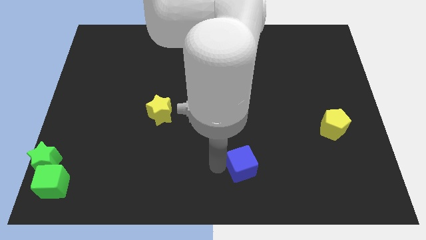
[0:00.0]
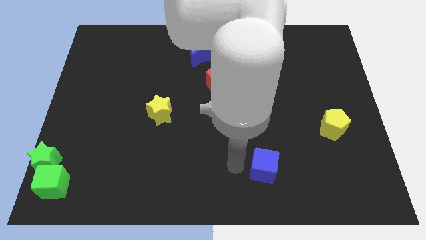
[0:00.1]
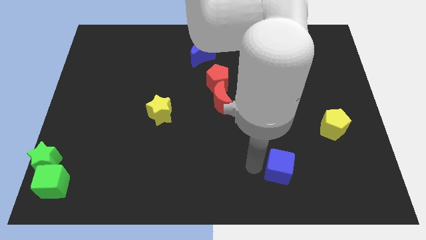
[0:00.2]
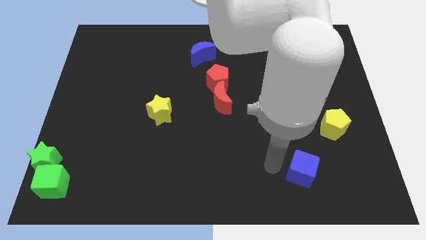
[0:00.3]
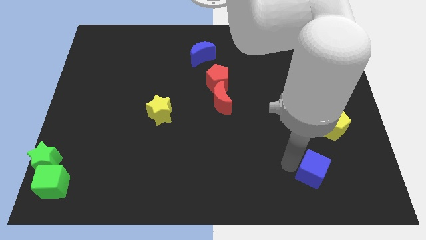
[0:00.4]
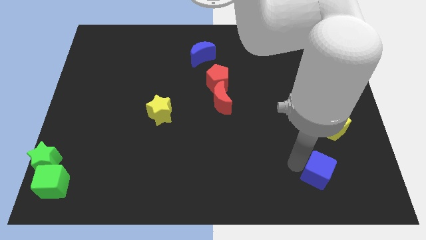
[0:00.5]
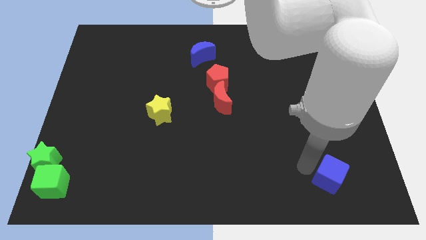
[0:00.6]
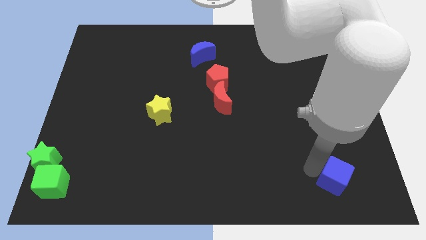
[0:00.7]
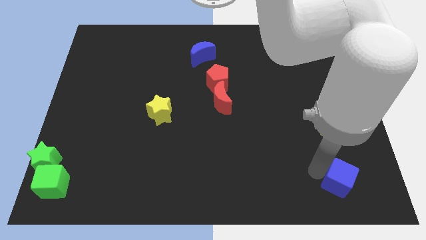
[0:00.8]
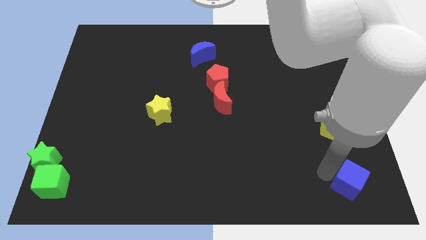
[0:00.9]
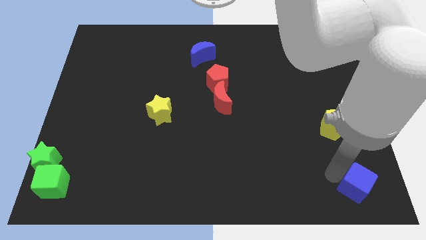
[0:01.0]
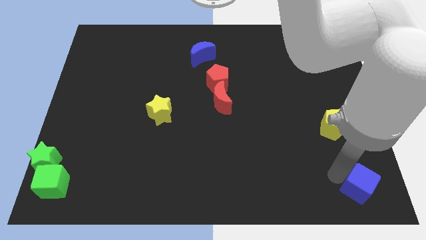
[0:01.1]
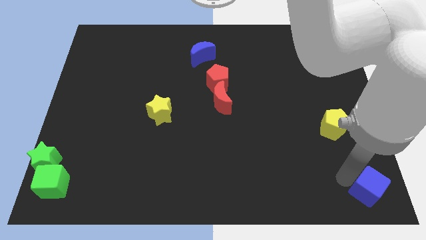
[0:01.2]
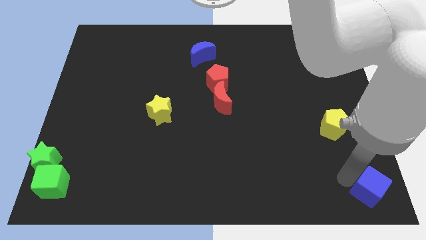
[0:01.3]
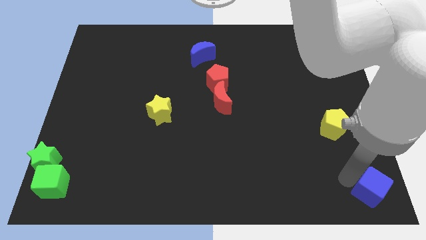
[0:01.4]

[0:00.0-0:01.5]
move the blue cube to the bottom right of the board

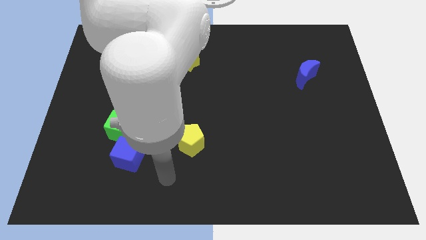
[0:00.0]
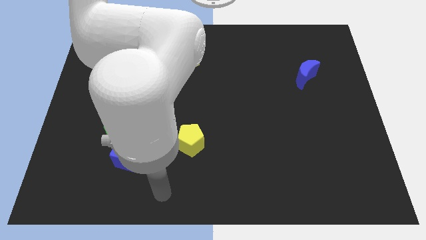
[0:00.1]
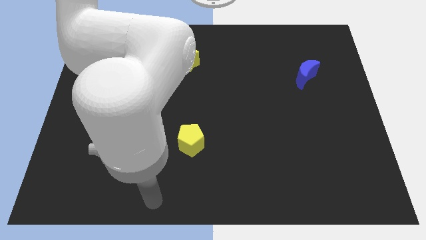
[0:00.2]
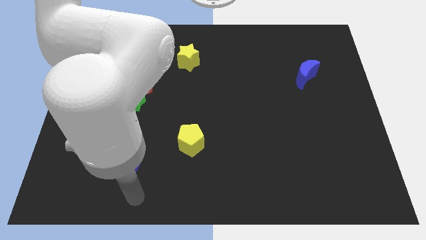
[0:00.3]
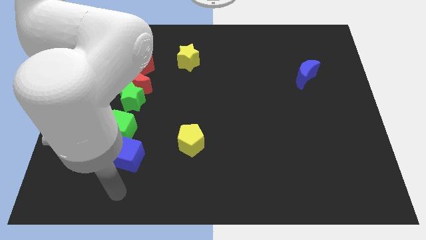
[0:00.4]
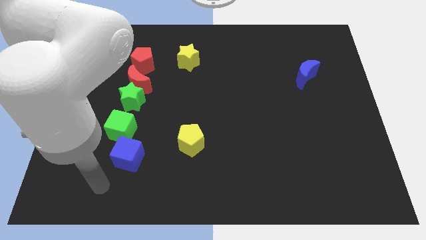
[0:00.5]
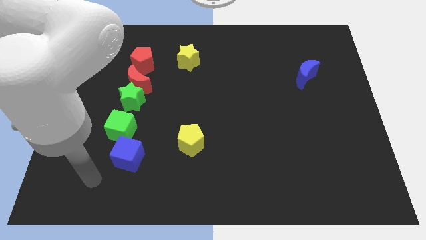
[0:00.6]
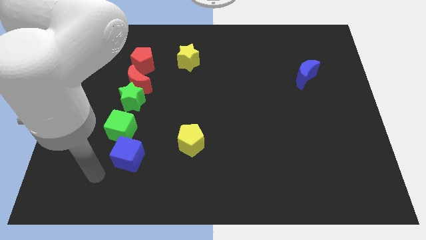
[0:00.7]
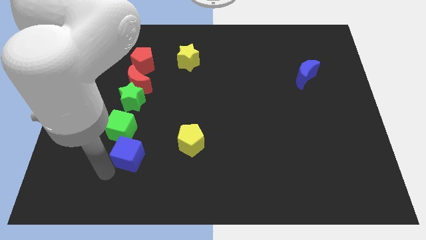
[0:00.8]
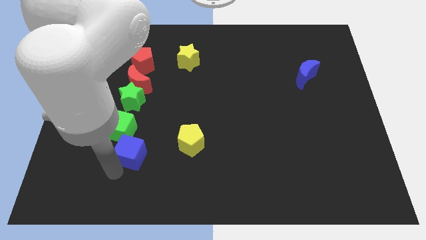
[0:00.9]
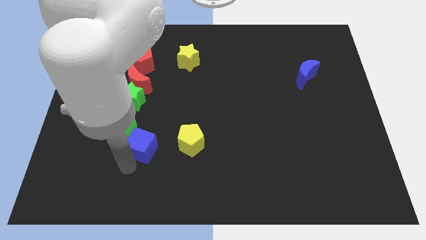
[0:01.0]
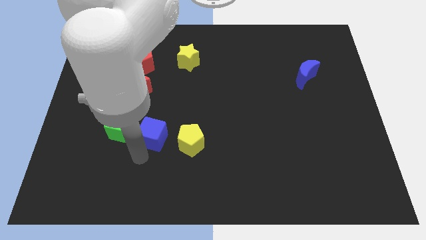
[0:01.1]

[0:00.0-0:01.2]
place blue cube between yellow pentagon and green cube

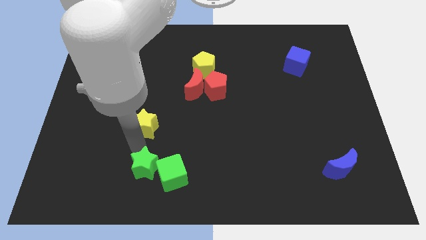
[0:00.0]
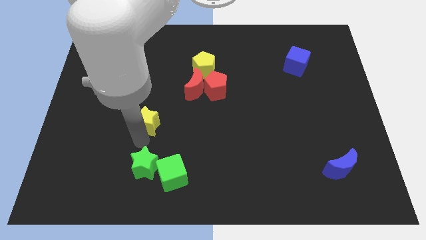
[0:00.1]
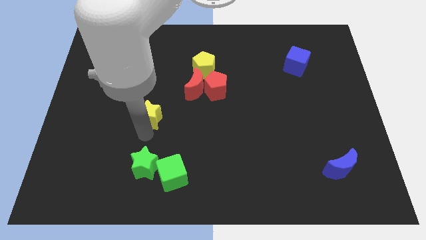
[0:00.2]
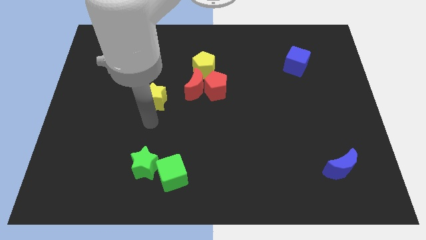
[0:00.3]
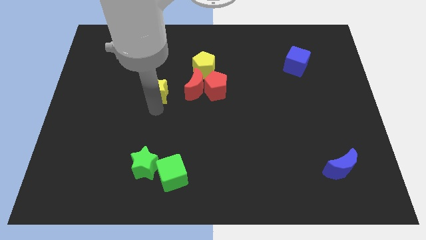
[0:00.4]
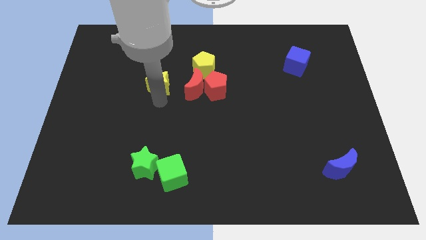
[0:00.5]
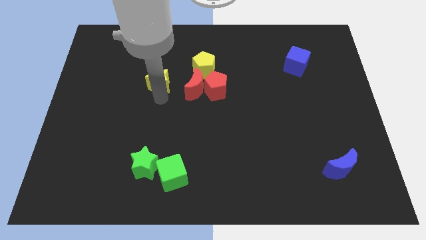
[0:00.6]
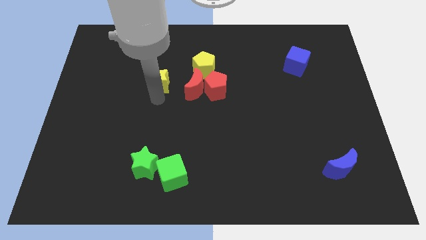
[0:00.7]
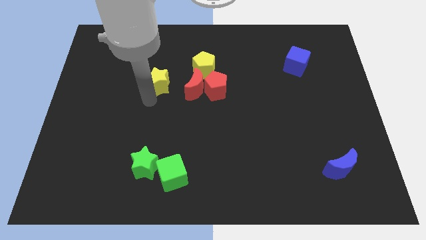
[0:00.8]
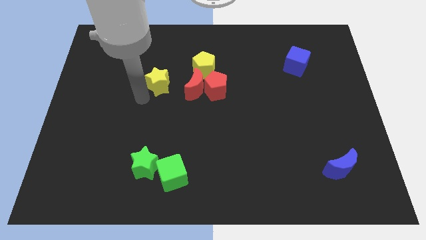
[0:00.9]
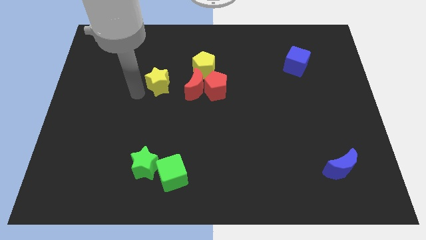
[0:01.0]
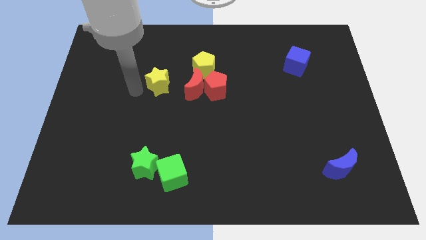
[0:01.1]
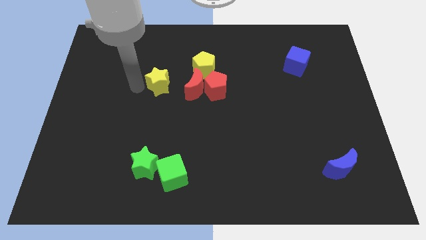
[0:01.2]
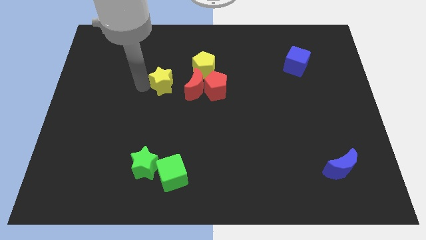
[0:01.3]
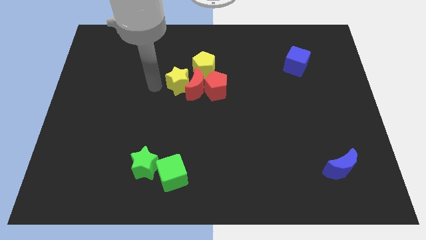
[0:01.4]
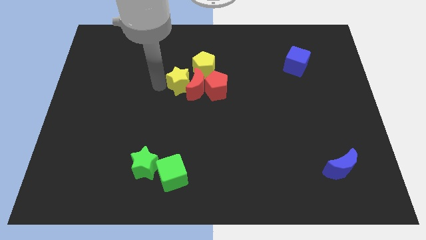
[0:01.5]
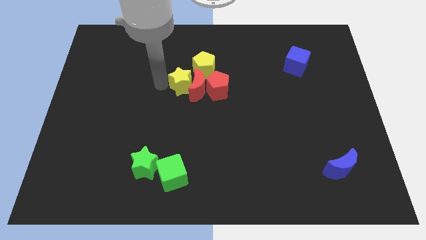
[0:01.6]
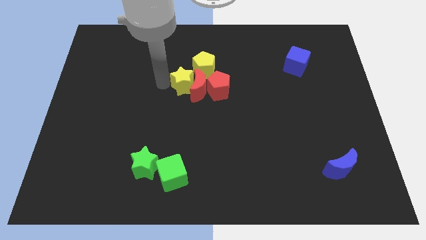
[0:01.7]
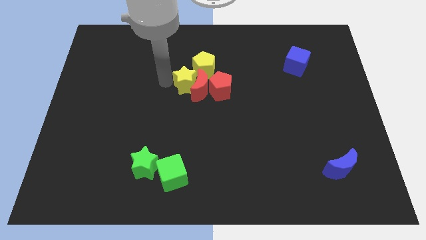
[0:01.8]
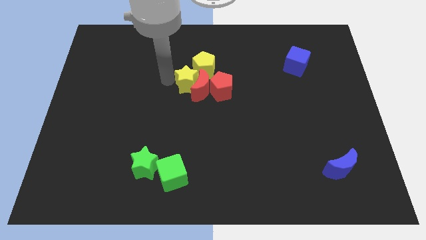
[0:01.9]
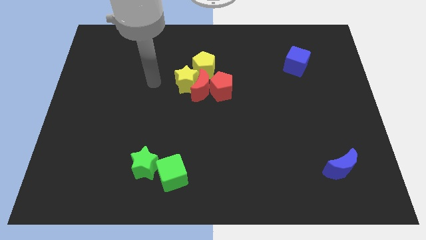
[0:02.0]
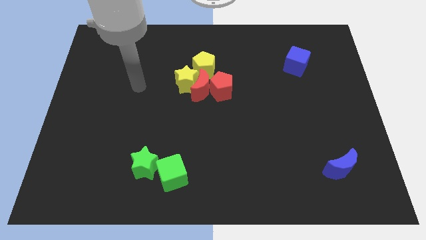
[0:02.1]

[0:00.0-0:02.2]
place a yellow star on the left side of the red crescent

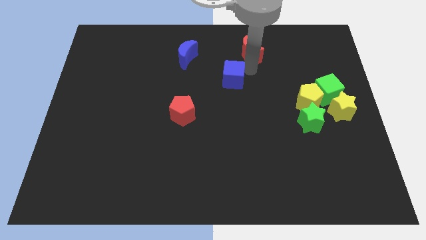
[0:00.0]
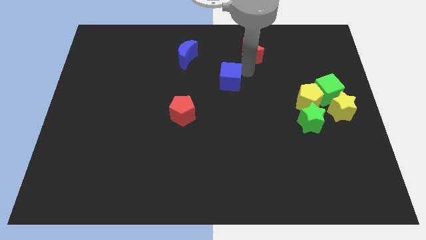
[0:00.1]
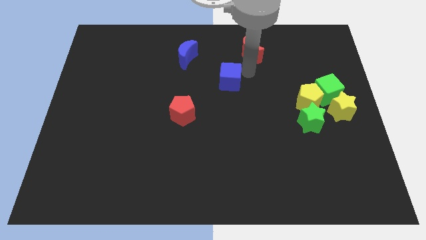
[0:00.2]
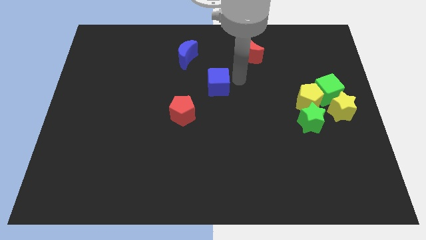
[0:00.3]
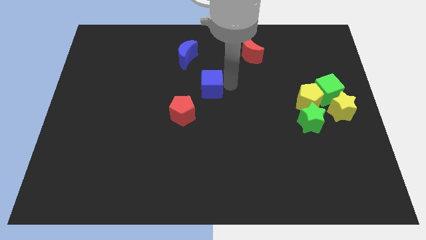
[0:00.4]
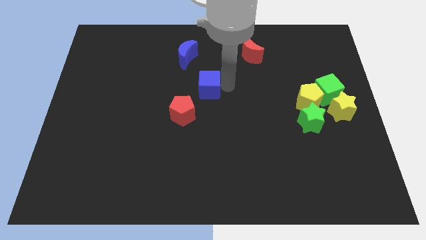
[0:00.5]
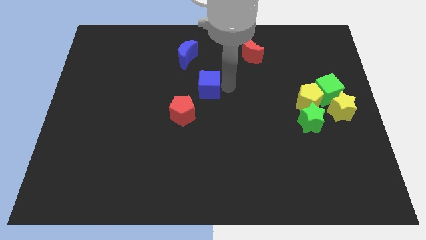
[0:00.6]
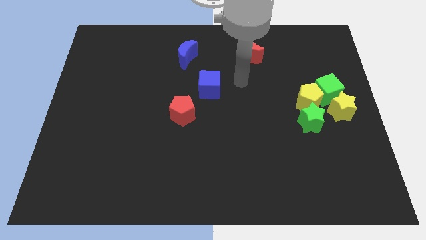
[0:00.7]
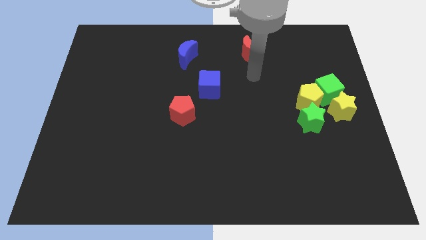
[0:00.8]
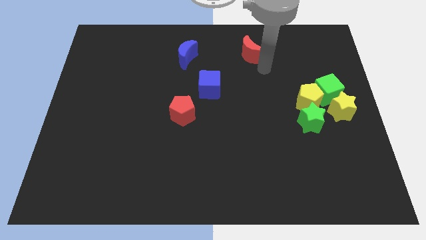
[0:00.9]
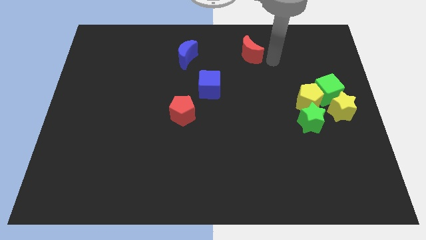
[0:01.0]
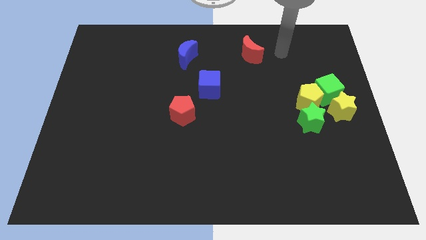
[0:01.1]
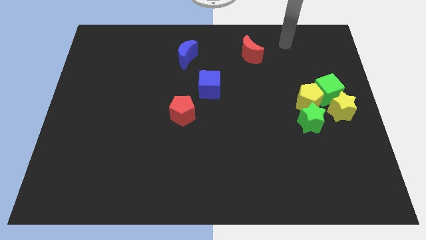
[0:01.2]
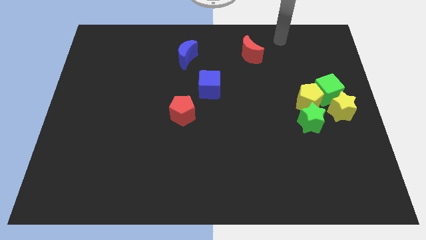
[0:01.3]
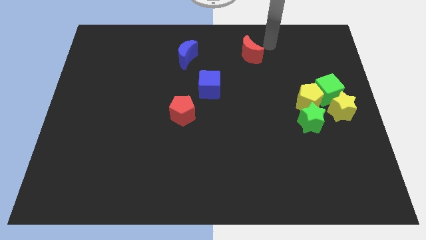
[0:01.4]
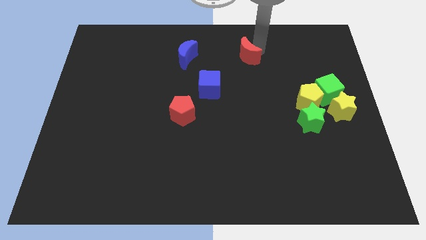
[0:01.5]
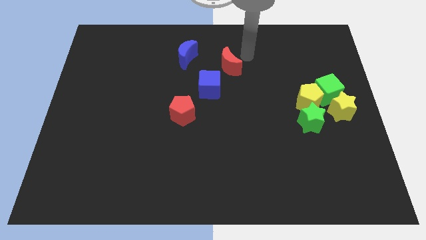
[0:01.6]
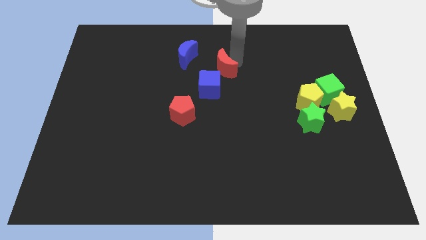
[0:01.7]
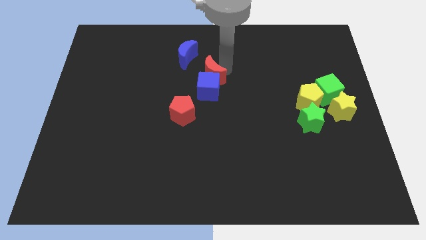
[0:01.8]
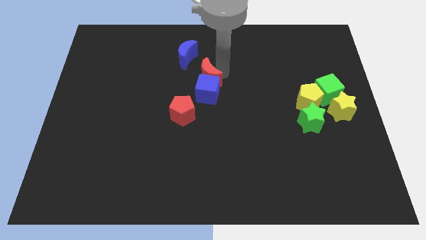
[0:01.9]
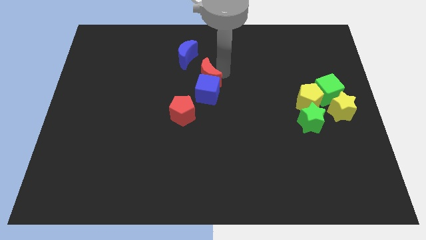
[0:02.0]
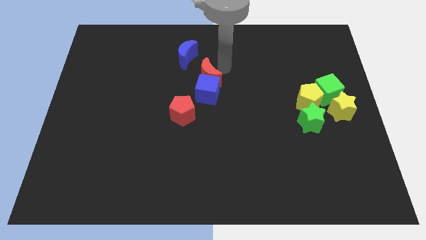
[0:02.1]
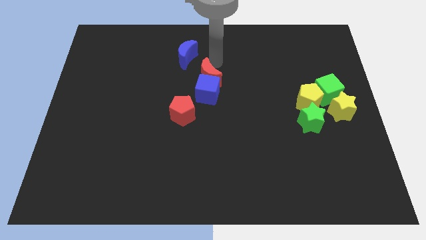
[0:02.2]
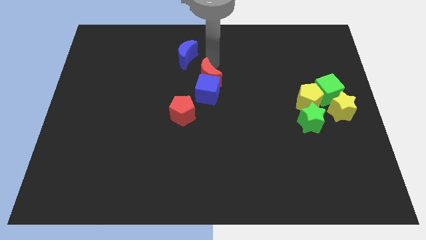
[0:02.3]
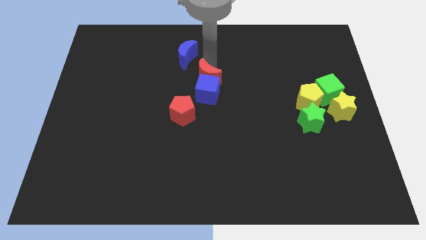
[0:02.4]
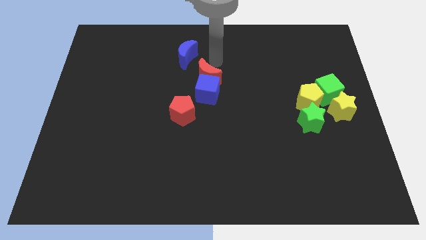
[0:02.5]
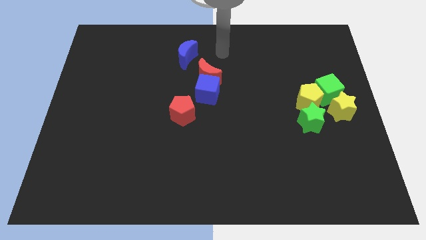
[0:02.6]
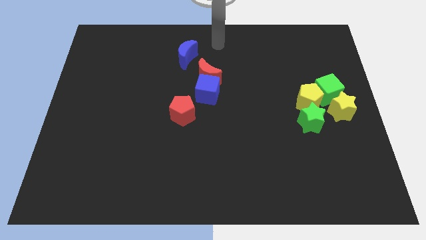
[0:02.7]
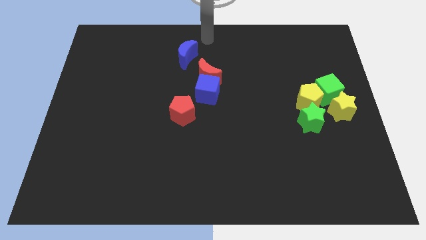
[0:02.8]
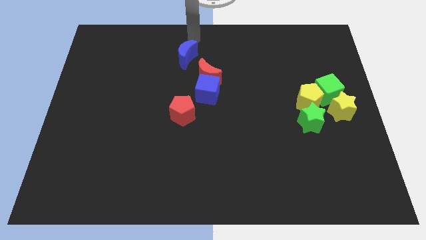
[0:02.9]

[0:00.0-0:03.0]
push the red moon and blue cube towards the red pentagon

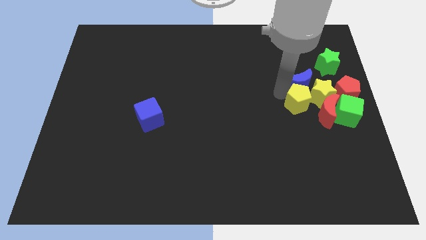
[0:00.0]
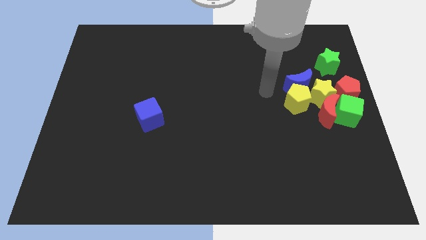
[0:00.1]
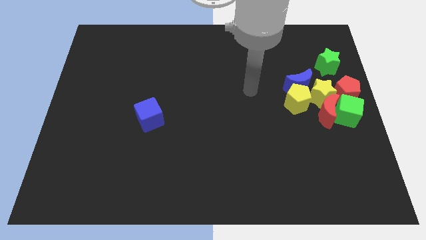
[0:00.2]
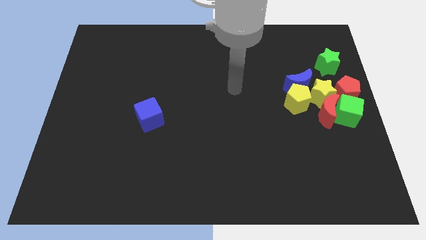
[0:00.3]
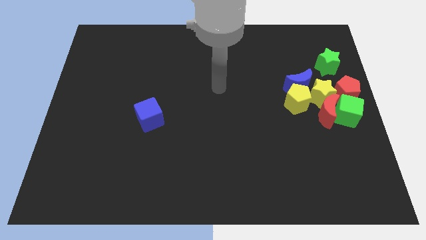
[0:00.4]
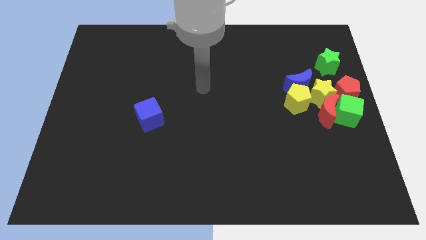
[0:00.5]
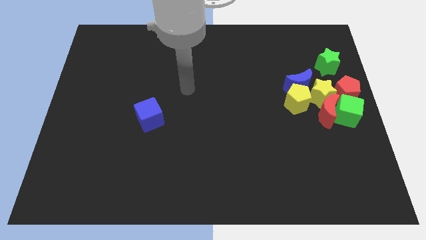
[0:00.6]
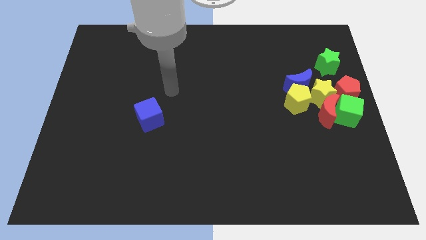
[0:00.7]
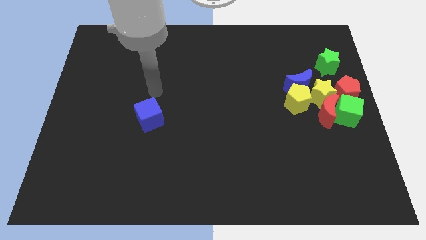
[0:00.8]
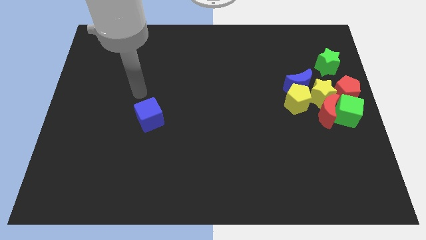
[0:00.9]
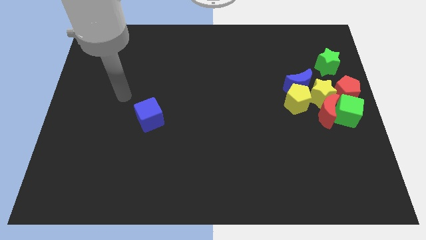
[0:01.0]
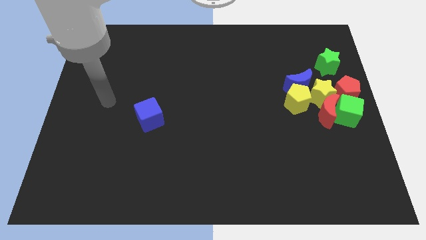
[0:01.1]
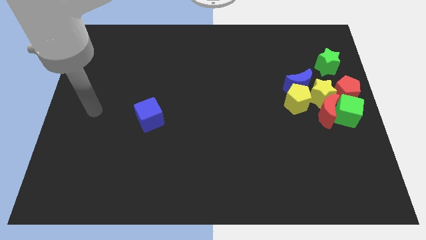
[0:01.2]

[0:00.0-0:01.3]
move arm towards the blue square in the left center of the board
